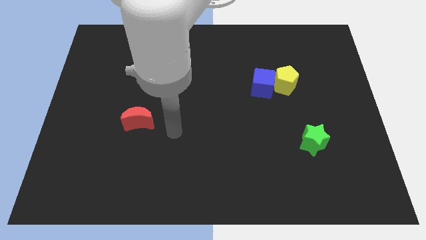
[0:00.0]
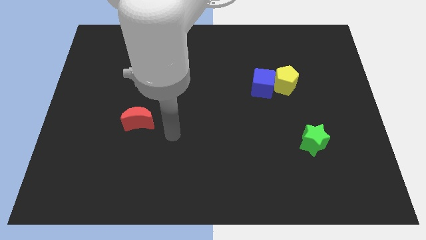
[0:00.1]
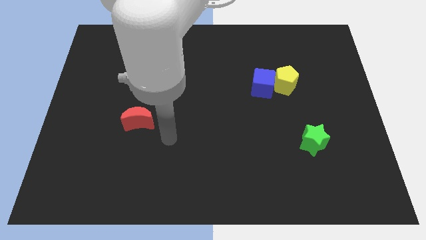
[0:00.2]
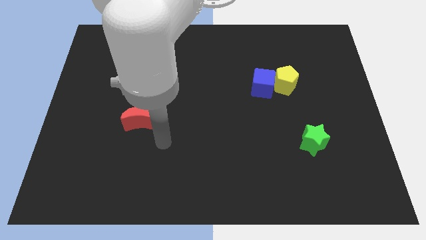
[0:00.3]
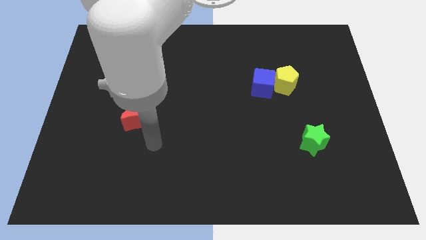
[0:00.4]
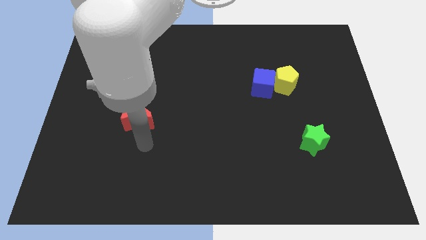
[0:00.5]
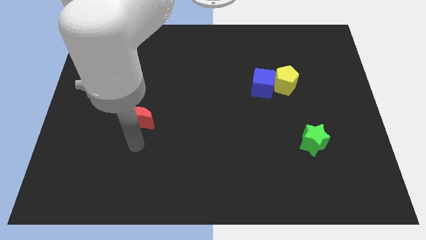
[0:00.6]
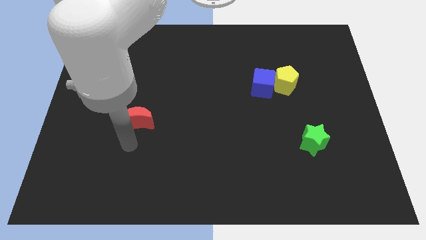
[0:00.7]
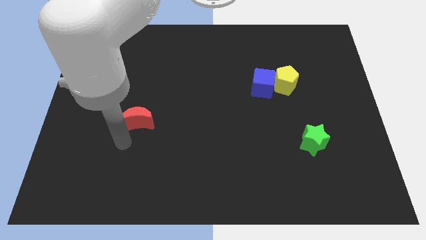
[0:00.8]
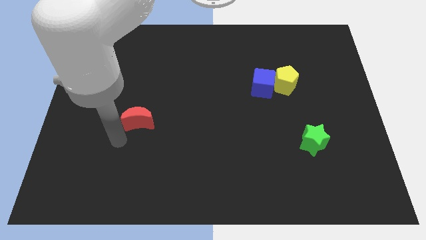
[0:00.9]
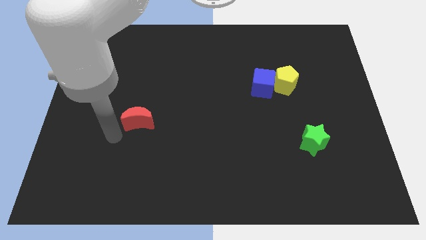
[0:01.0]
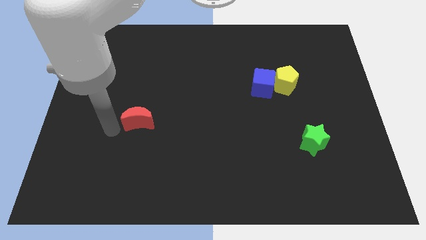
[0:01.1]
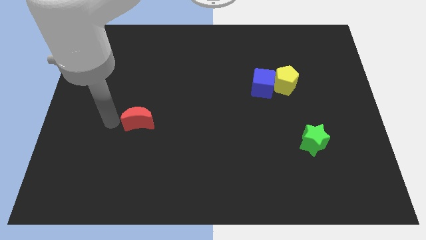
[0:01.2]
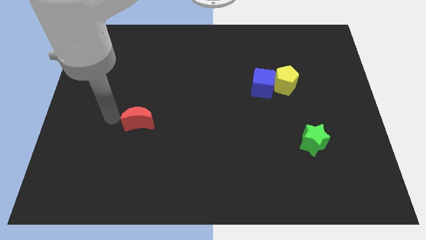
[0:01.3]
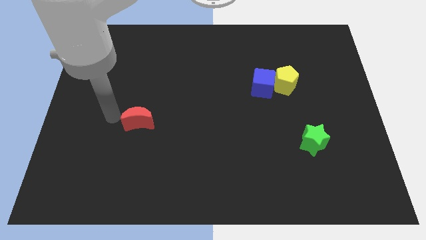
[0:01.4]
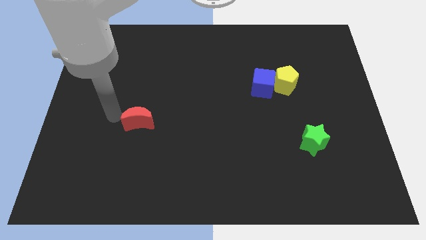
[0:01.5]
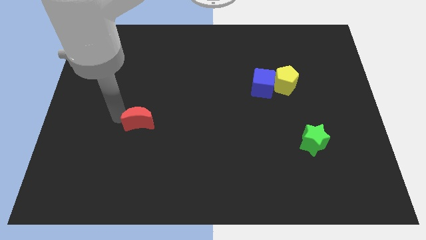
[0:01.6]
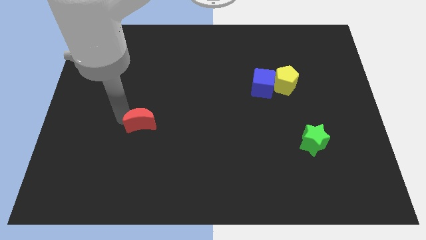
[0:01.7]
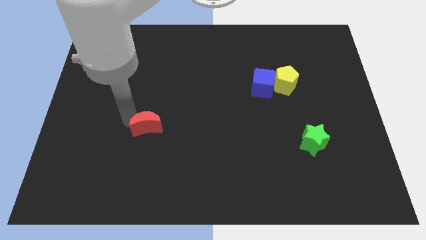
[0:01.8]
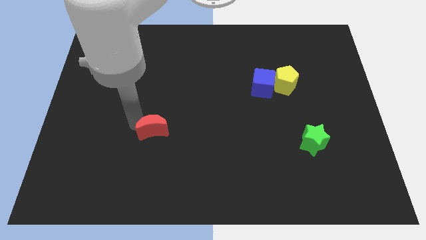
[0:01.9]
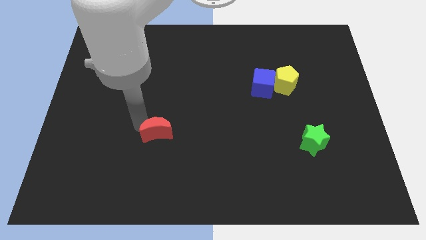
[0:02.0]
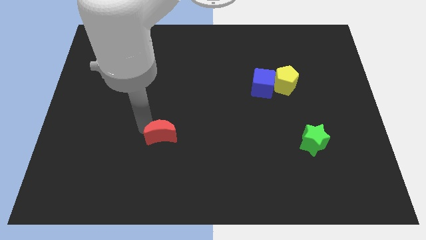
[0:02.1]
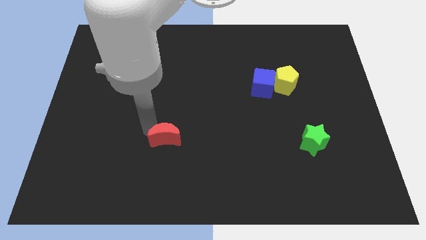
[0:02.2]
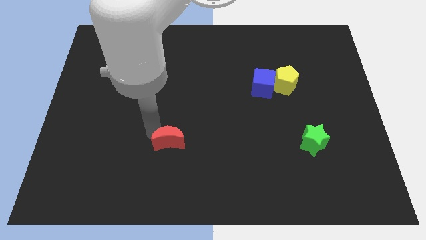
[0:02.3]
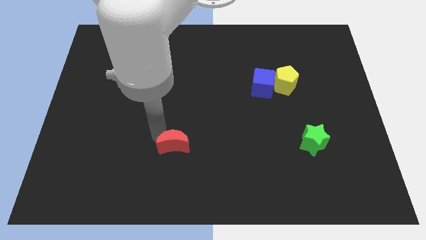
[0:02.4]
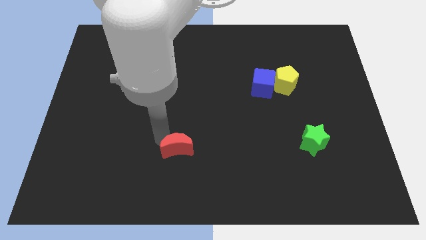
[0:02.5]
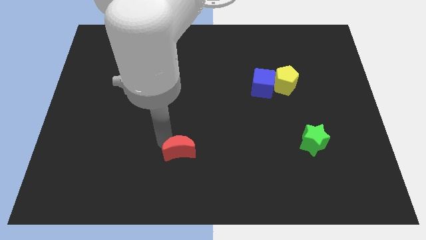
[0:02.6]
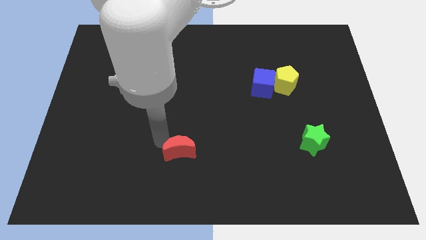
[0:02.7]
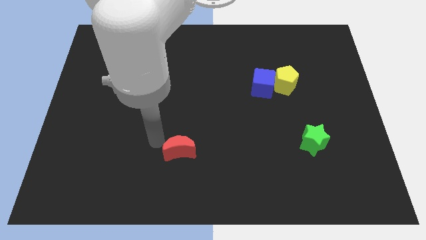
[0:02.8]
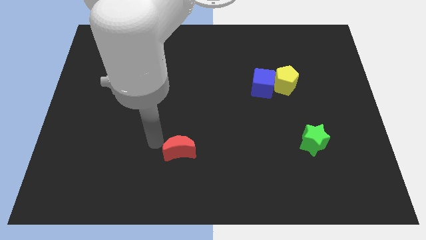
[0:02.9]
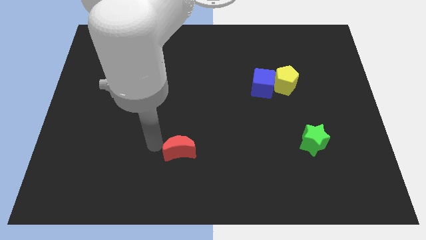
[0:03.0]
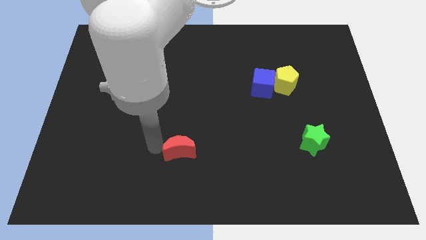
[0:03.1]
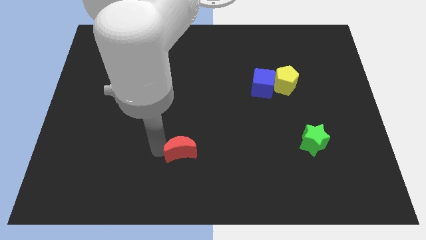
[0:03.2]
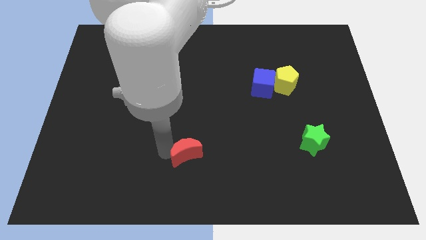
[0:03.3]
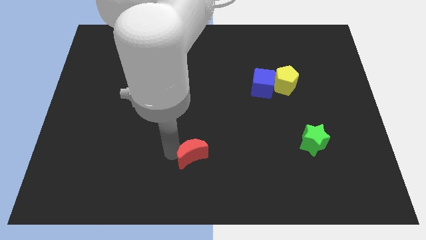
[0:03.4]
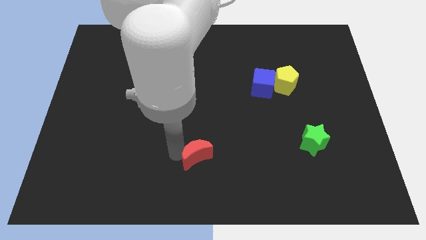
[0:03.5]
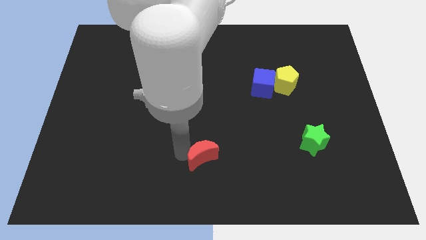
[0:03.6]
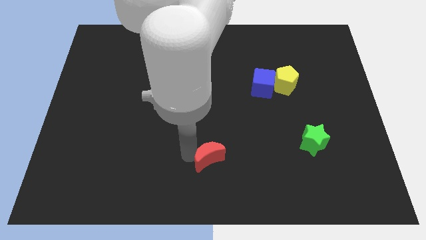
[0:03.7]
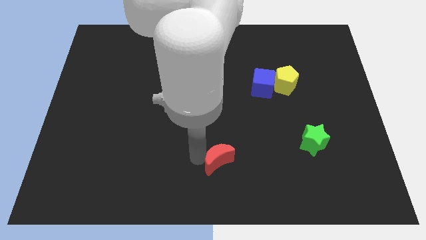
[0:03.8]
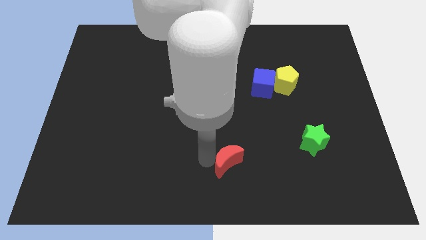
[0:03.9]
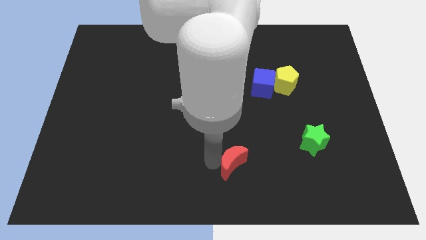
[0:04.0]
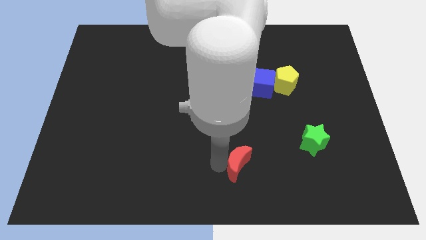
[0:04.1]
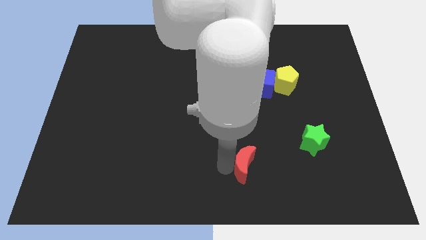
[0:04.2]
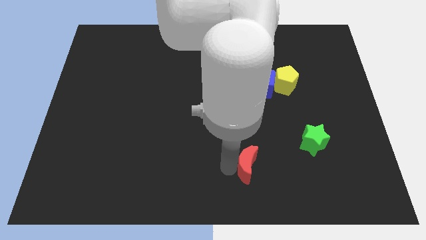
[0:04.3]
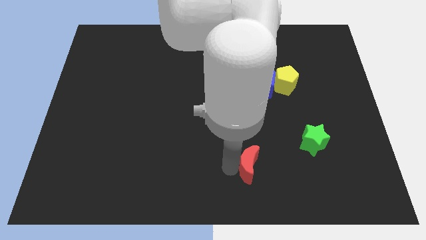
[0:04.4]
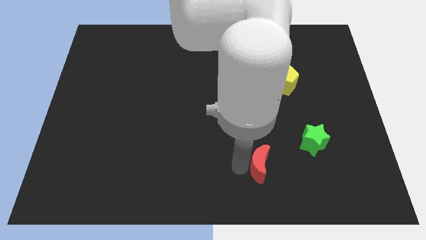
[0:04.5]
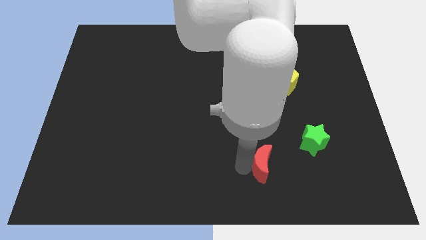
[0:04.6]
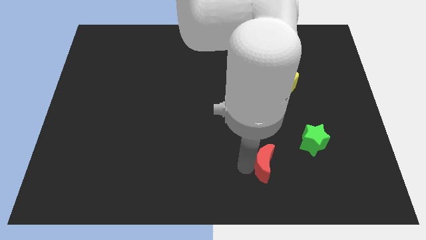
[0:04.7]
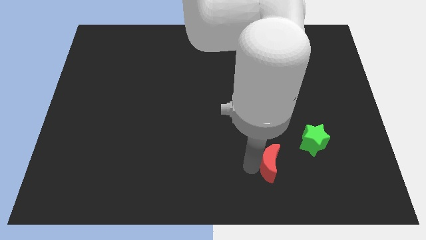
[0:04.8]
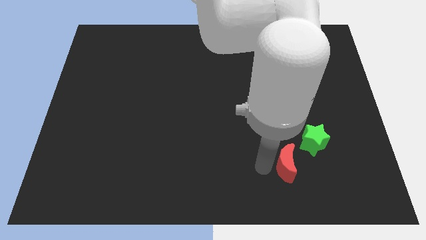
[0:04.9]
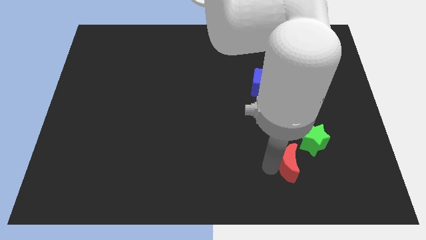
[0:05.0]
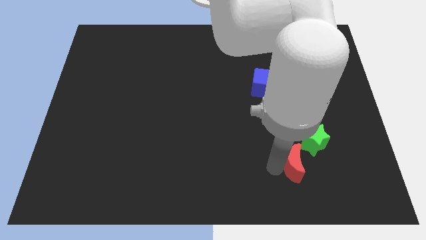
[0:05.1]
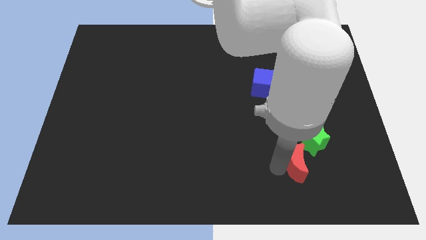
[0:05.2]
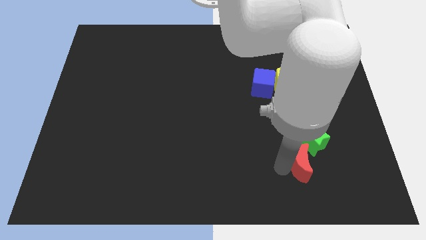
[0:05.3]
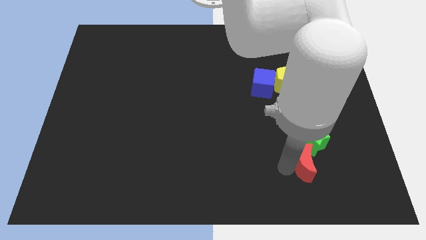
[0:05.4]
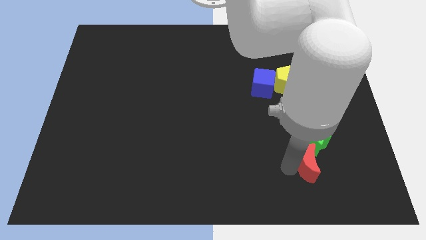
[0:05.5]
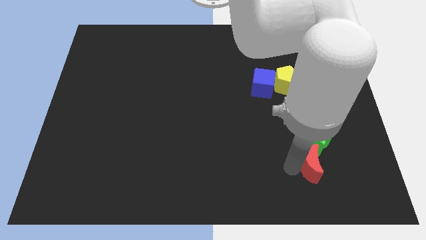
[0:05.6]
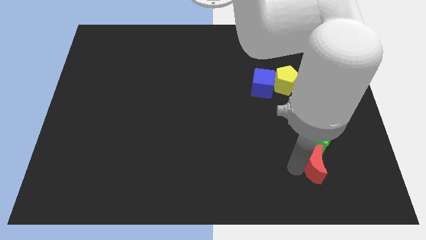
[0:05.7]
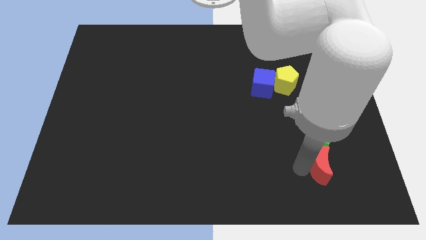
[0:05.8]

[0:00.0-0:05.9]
push the moon close to the green block

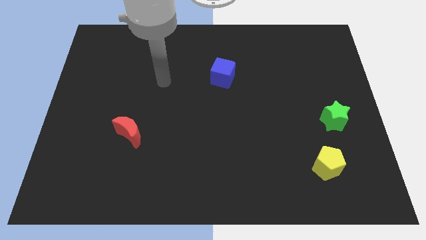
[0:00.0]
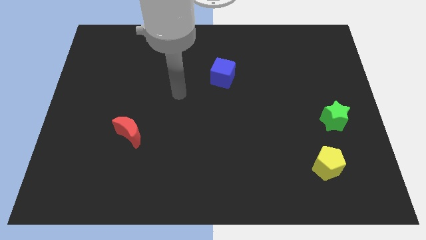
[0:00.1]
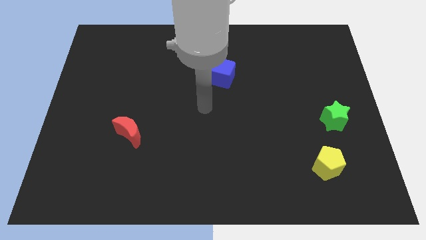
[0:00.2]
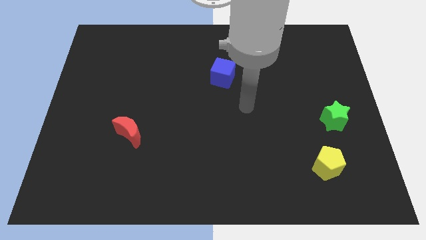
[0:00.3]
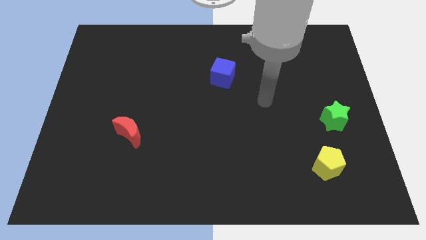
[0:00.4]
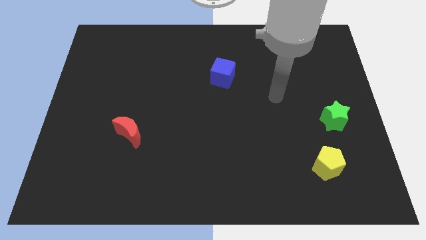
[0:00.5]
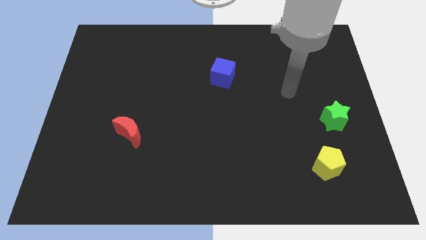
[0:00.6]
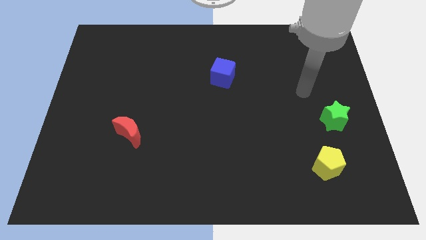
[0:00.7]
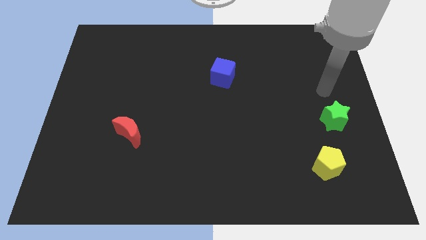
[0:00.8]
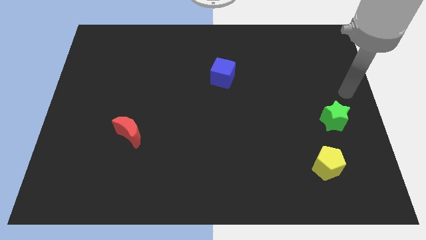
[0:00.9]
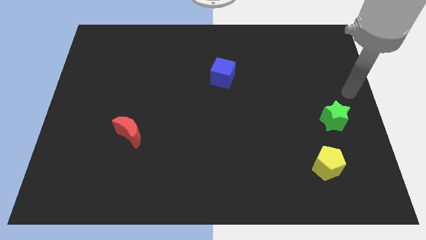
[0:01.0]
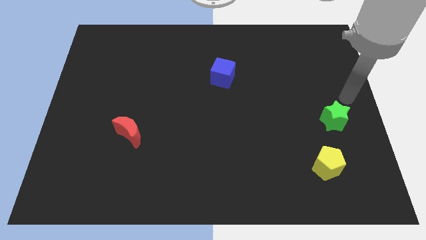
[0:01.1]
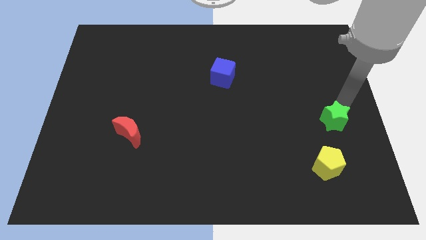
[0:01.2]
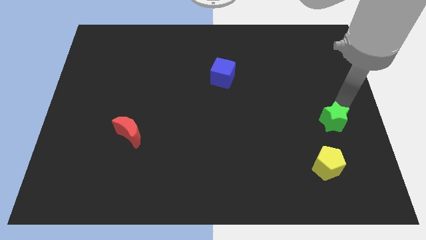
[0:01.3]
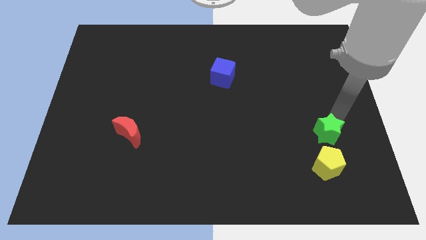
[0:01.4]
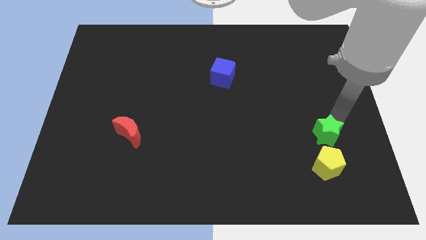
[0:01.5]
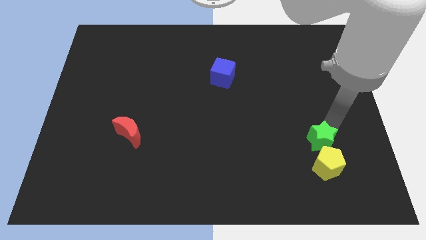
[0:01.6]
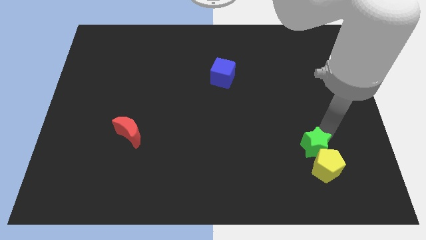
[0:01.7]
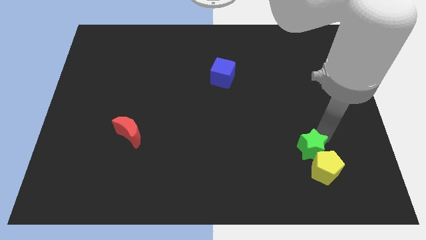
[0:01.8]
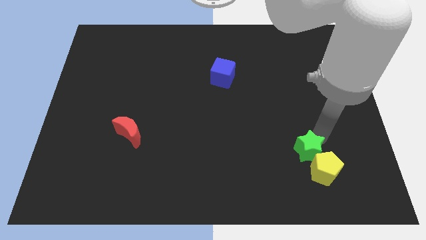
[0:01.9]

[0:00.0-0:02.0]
move the green star close to the pentagon

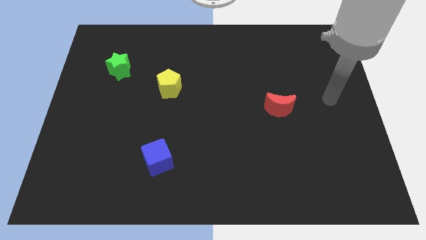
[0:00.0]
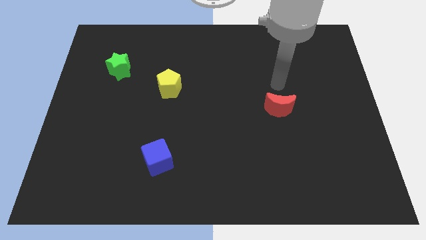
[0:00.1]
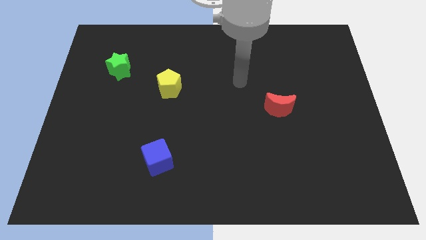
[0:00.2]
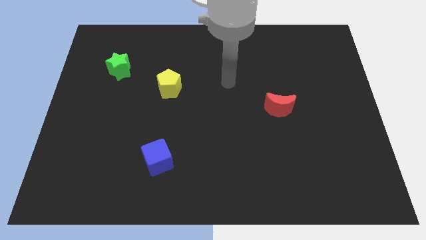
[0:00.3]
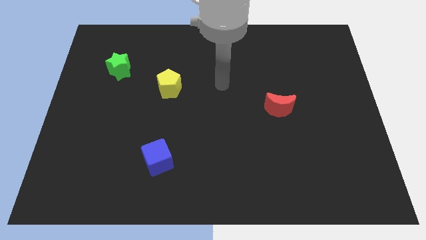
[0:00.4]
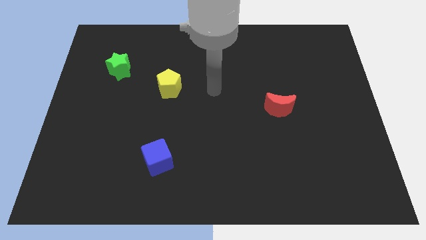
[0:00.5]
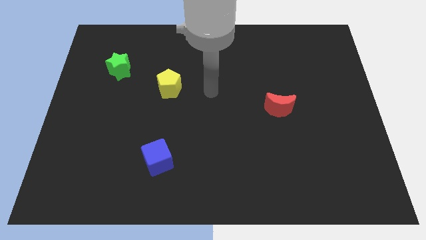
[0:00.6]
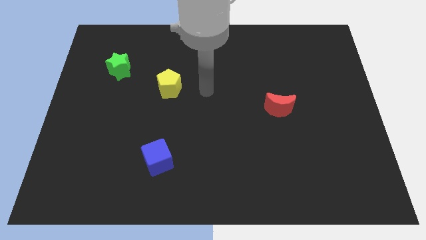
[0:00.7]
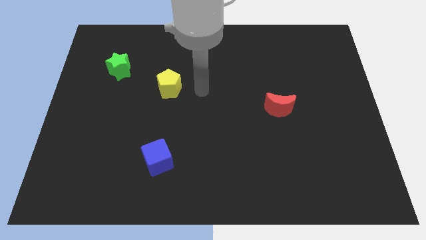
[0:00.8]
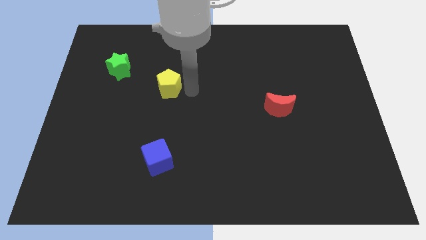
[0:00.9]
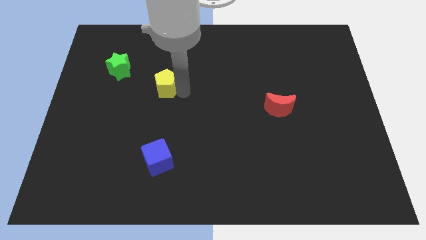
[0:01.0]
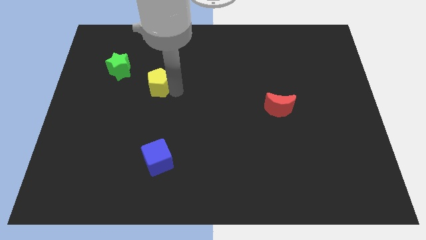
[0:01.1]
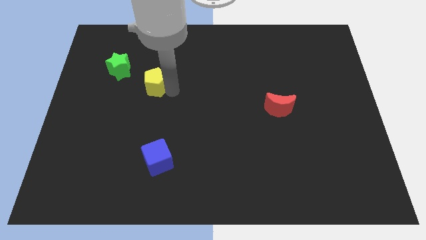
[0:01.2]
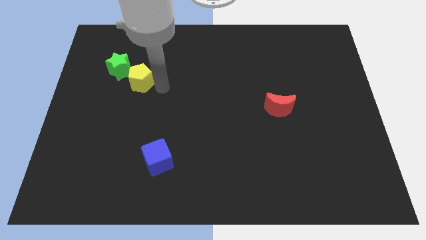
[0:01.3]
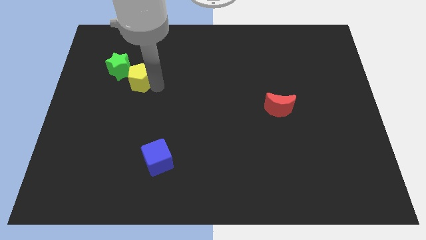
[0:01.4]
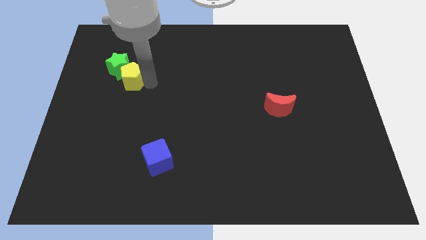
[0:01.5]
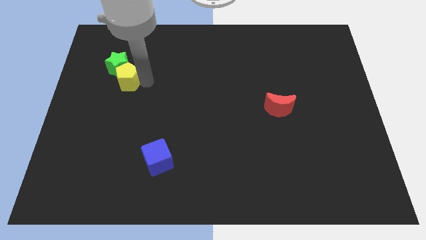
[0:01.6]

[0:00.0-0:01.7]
push the pentagon close to the green block
